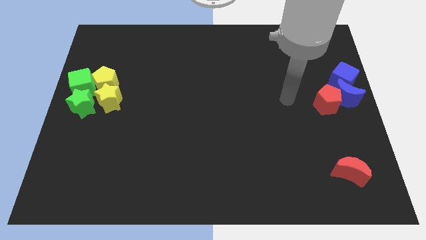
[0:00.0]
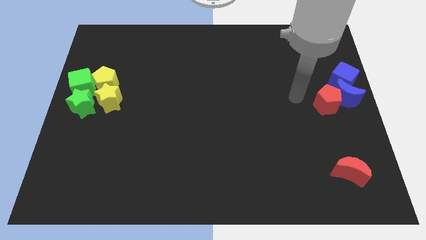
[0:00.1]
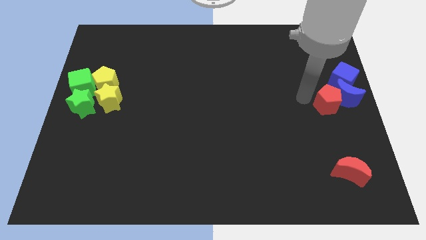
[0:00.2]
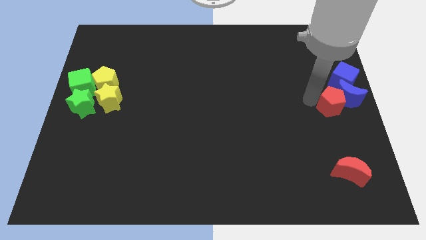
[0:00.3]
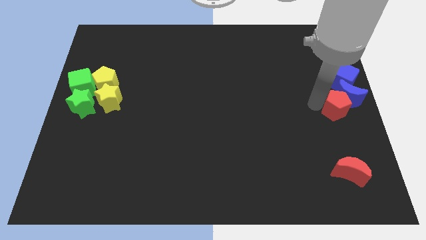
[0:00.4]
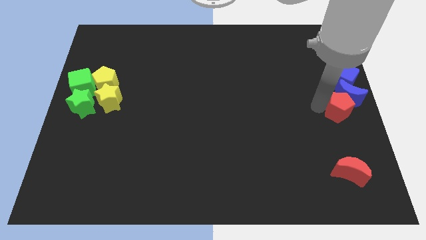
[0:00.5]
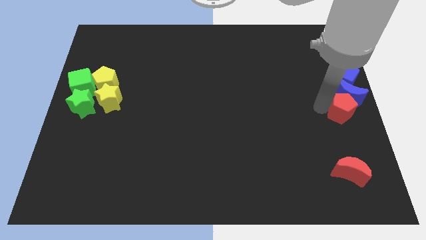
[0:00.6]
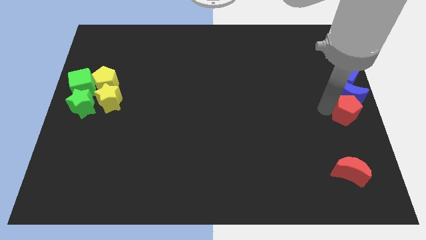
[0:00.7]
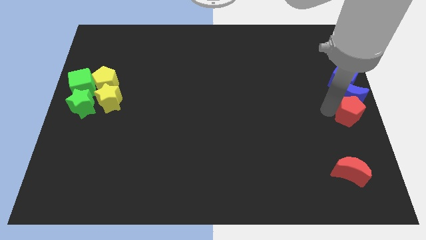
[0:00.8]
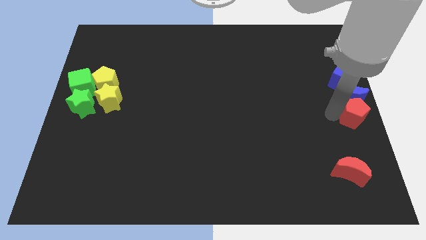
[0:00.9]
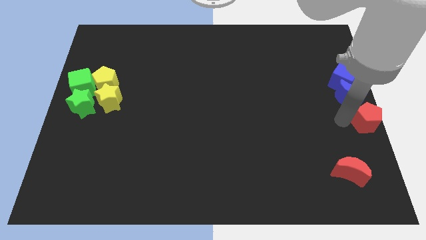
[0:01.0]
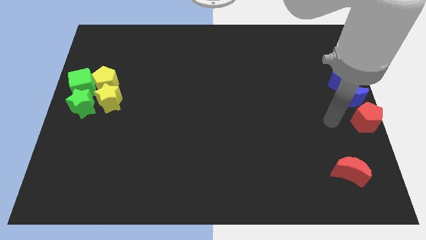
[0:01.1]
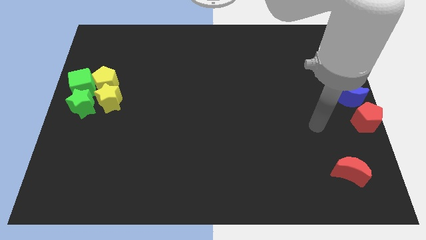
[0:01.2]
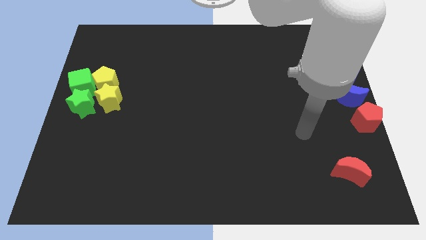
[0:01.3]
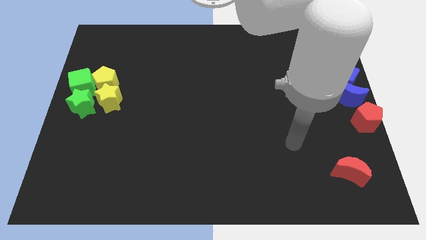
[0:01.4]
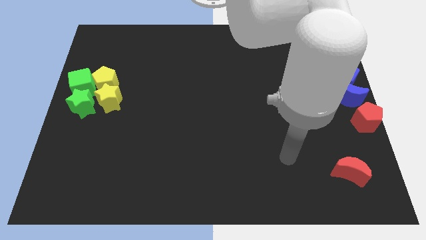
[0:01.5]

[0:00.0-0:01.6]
push the red pentagon to the right center of the board

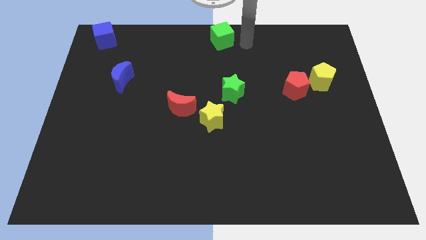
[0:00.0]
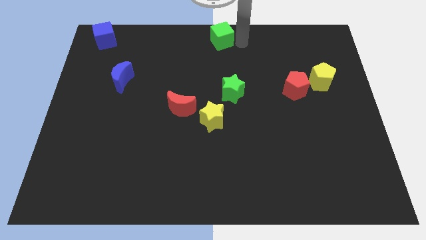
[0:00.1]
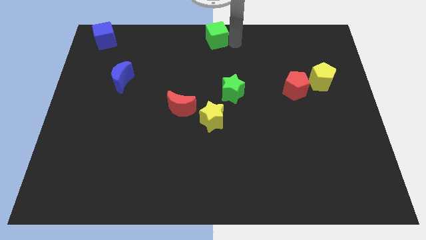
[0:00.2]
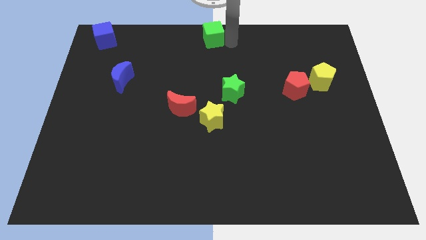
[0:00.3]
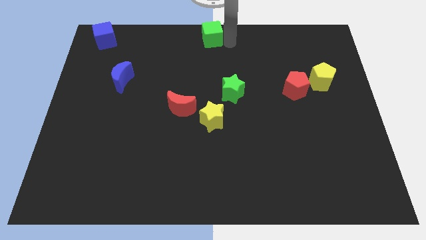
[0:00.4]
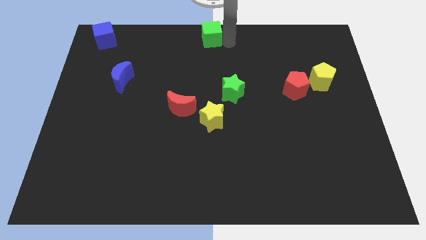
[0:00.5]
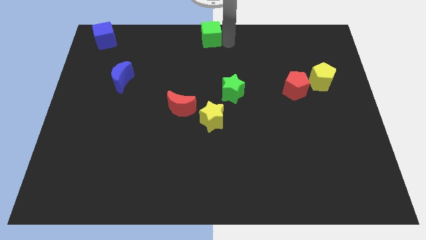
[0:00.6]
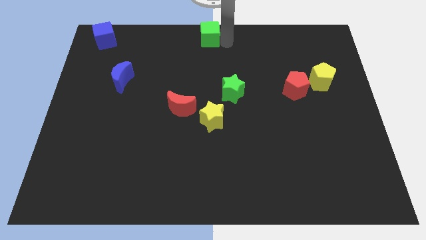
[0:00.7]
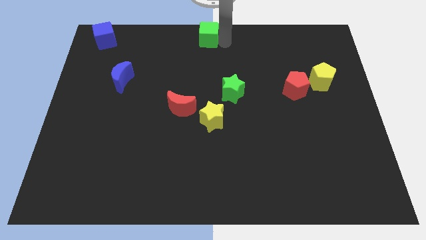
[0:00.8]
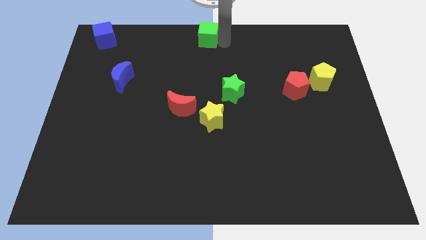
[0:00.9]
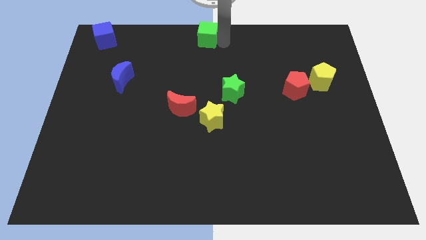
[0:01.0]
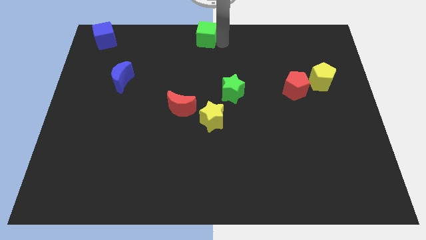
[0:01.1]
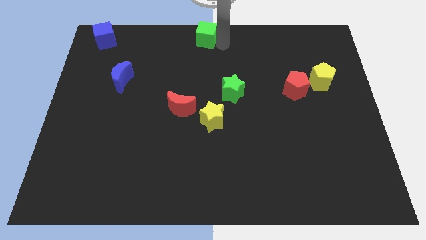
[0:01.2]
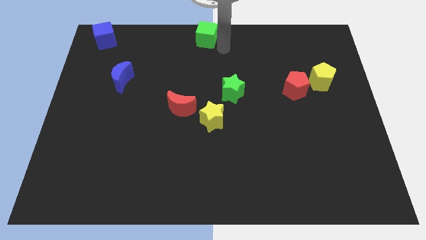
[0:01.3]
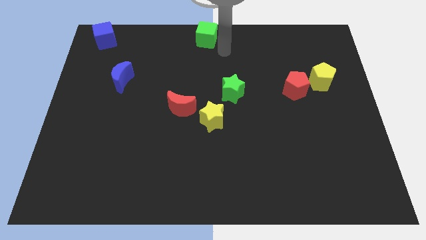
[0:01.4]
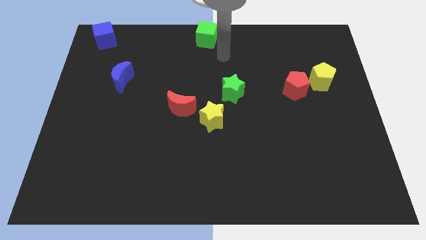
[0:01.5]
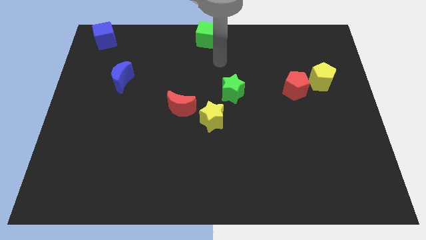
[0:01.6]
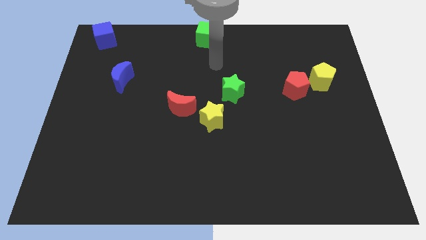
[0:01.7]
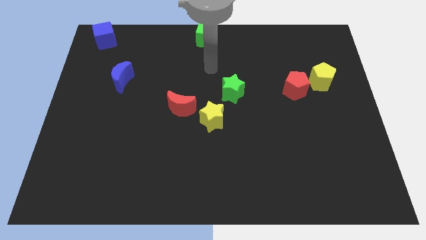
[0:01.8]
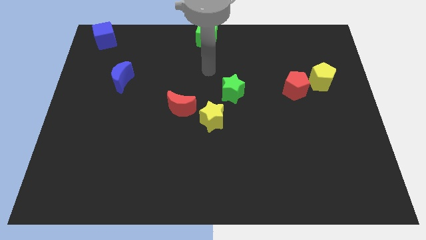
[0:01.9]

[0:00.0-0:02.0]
push green cube to the top centre of the board

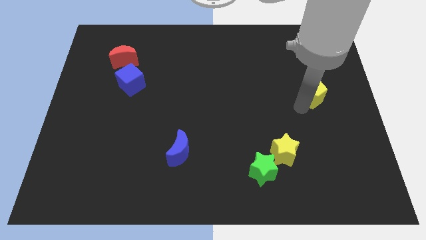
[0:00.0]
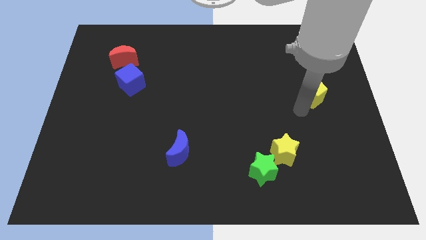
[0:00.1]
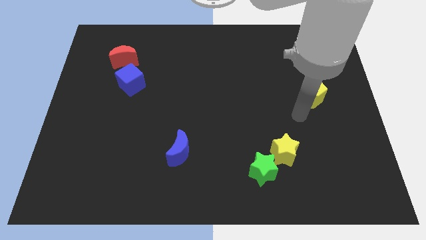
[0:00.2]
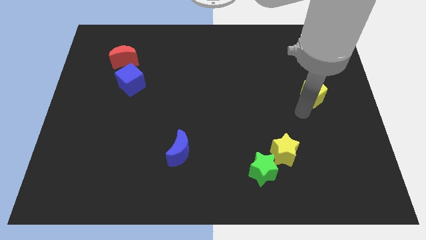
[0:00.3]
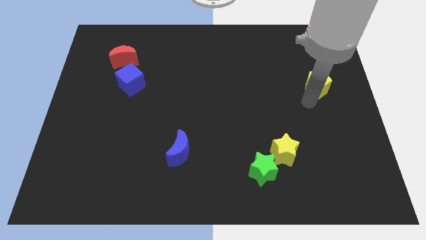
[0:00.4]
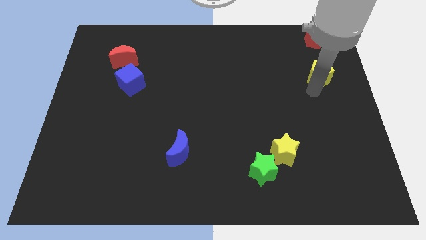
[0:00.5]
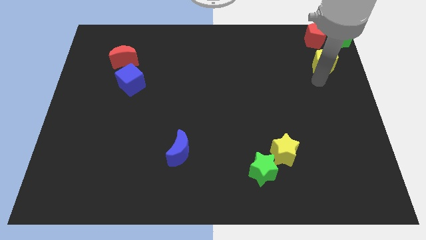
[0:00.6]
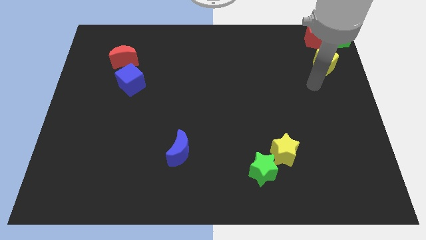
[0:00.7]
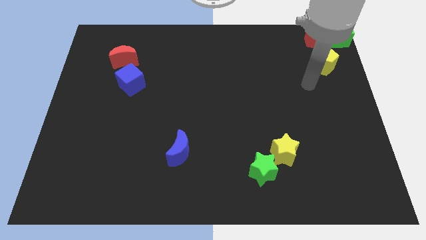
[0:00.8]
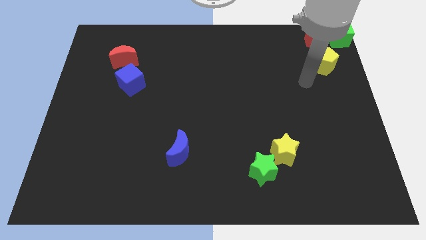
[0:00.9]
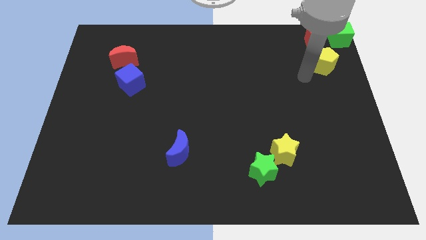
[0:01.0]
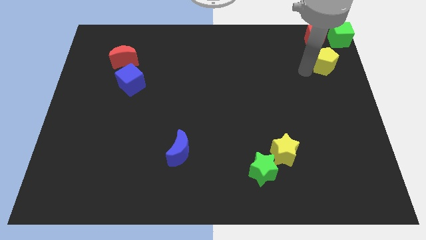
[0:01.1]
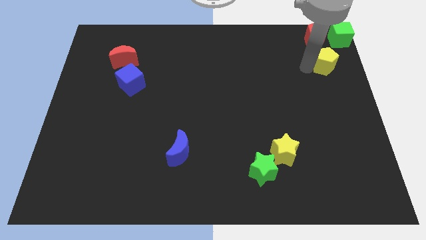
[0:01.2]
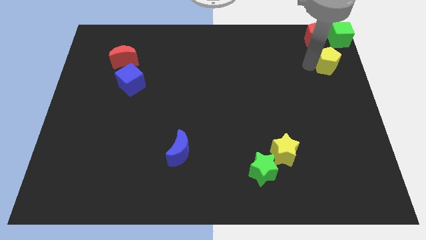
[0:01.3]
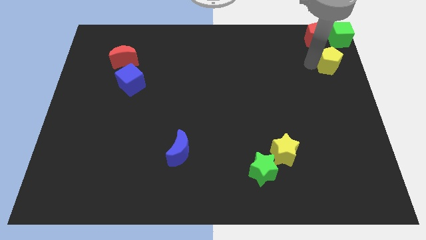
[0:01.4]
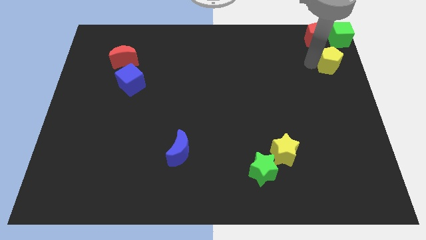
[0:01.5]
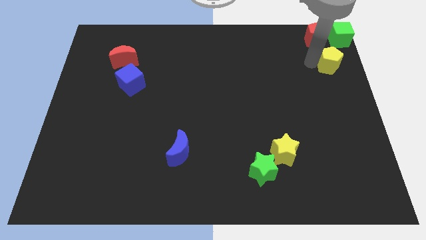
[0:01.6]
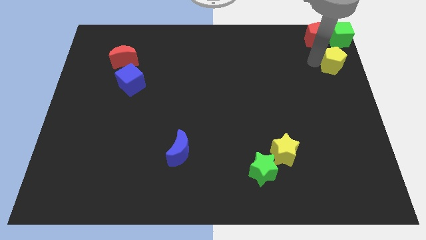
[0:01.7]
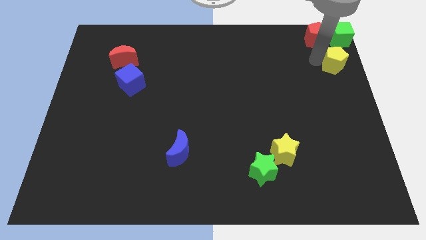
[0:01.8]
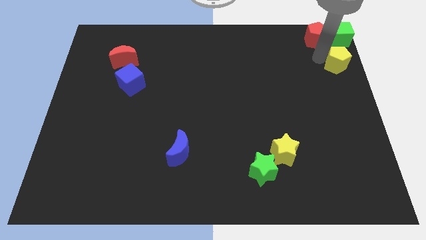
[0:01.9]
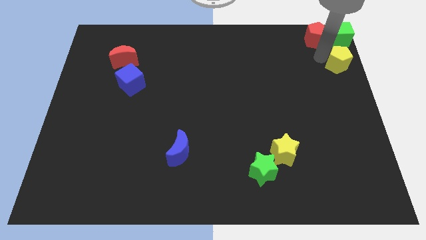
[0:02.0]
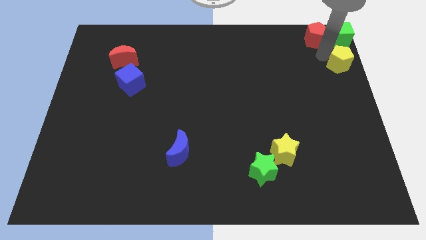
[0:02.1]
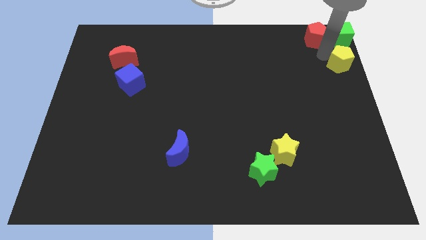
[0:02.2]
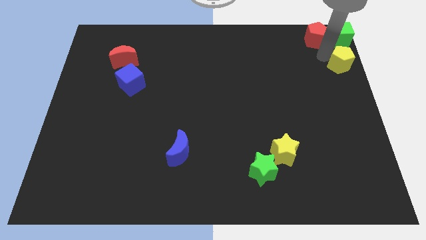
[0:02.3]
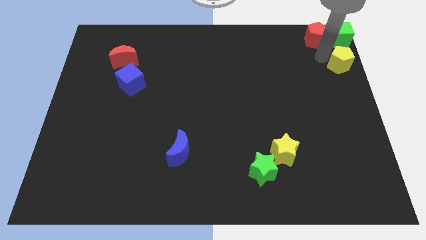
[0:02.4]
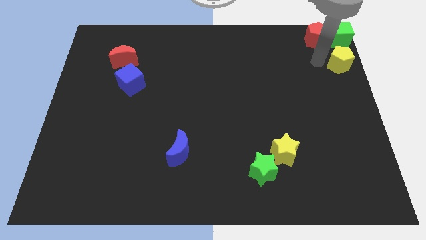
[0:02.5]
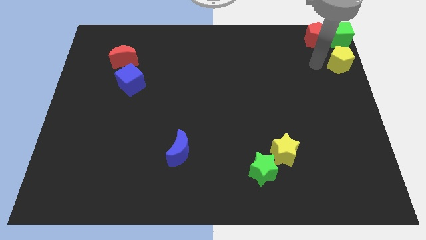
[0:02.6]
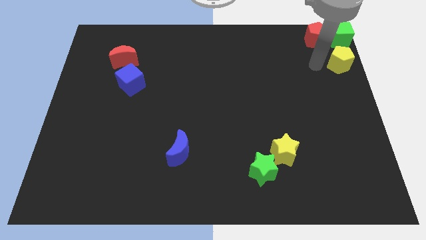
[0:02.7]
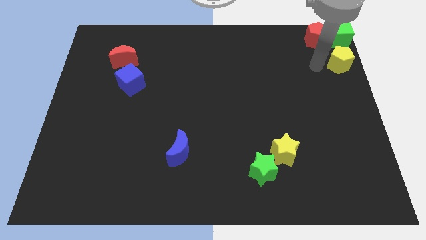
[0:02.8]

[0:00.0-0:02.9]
place the yellow pentagon below the green block

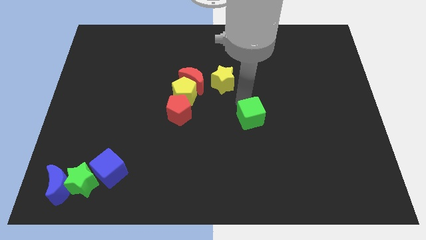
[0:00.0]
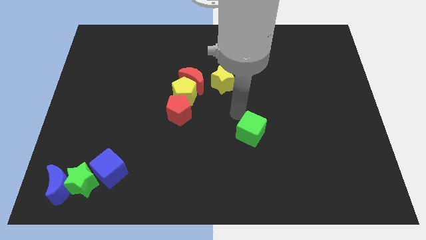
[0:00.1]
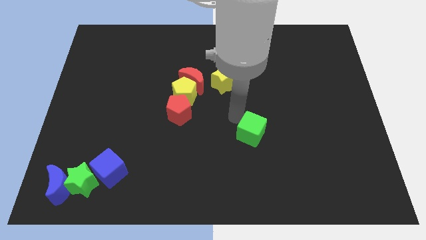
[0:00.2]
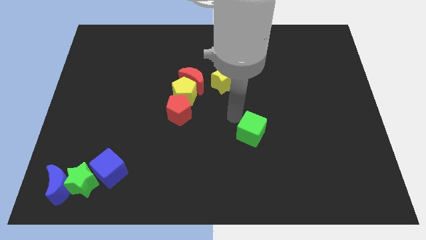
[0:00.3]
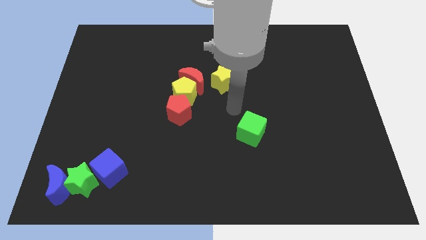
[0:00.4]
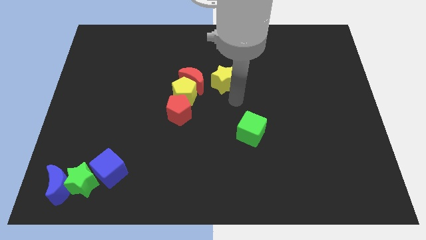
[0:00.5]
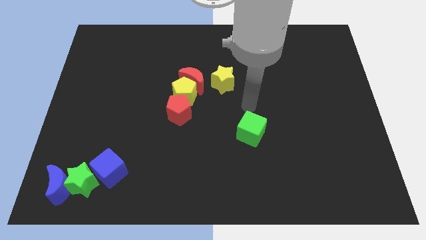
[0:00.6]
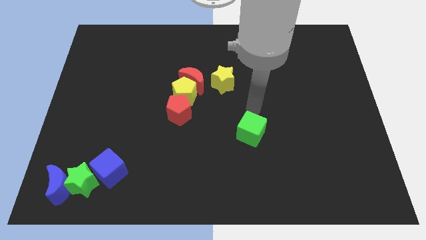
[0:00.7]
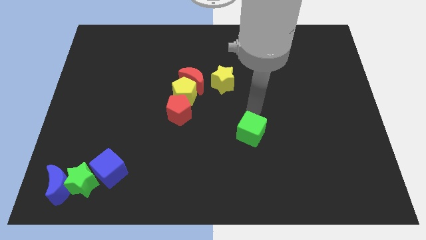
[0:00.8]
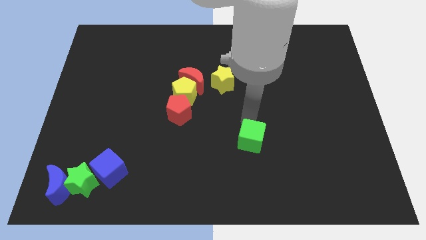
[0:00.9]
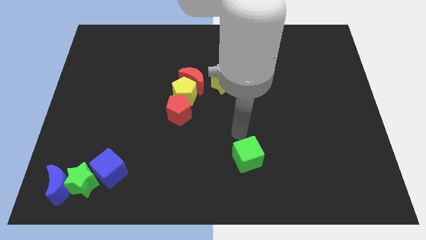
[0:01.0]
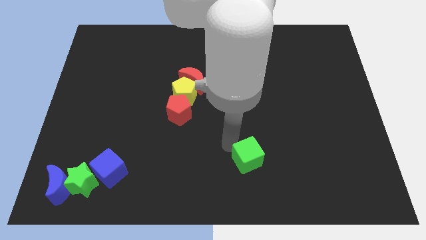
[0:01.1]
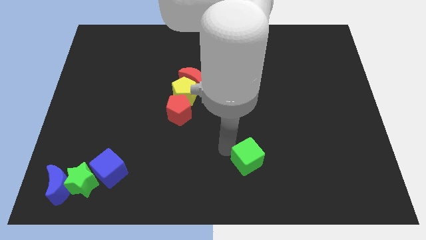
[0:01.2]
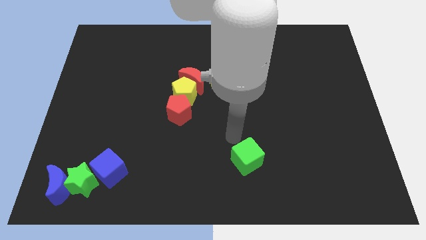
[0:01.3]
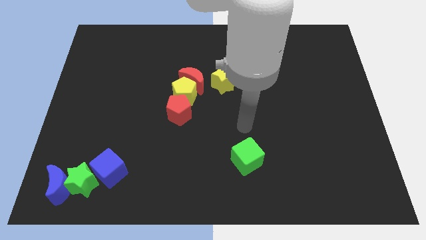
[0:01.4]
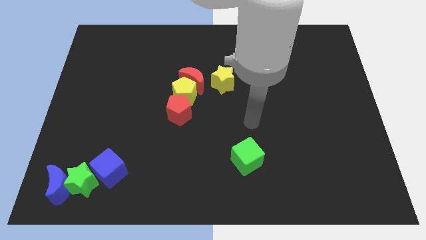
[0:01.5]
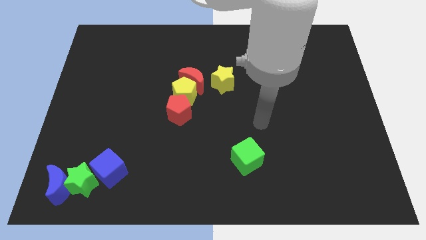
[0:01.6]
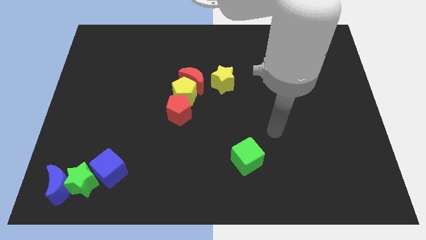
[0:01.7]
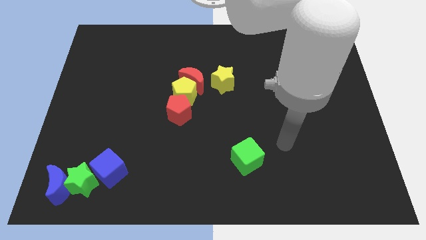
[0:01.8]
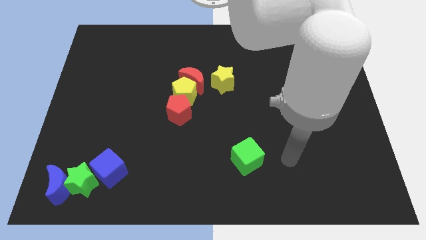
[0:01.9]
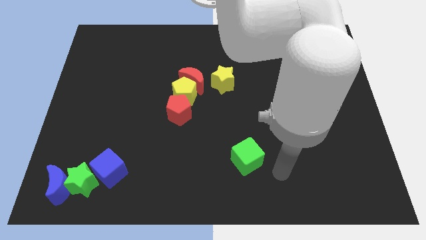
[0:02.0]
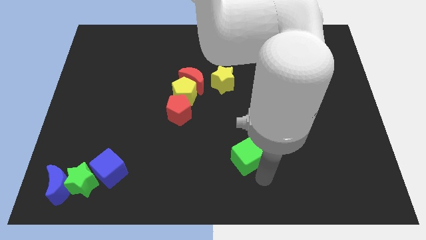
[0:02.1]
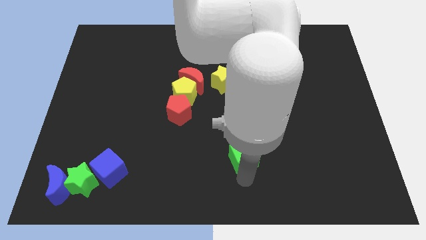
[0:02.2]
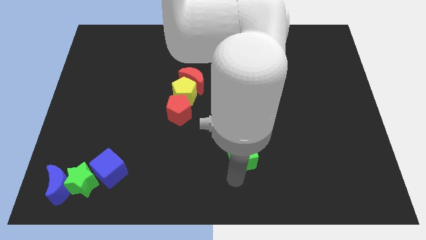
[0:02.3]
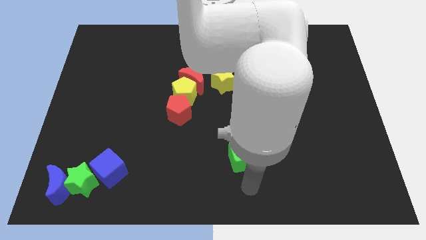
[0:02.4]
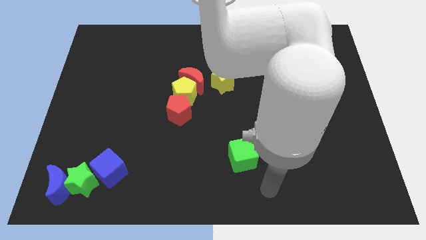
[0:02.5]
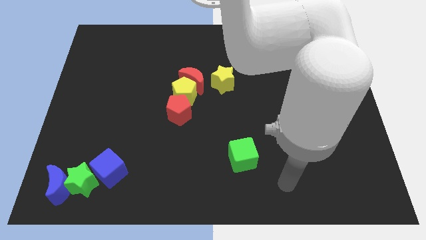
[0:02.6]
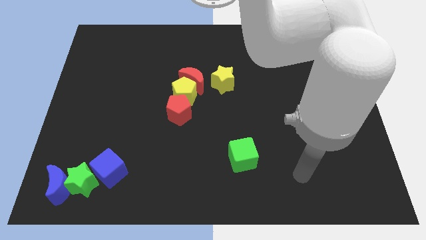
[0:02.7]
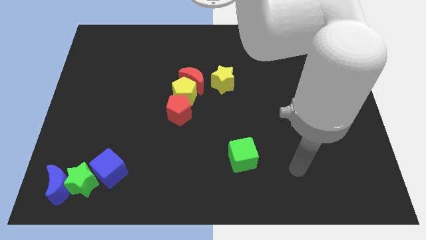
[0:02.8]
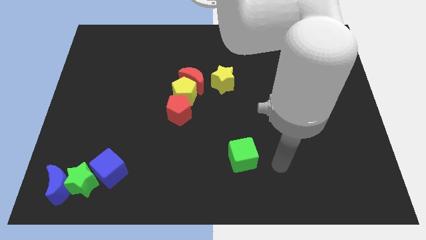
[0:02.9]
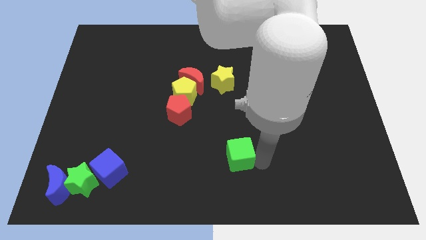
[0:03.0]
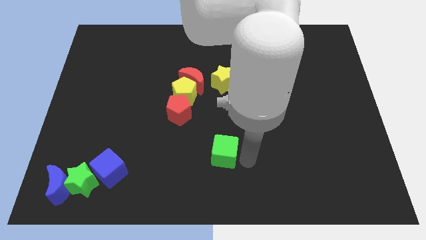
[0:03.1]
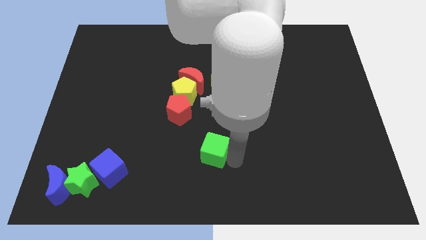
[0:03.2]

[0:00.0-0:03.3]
place the green cube at the bottom of the yellow star vertically
